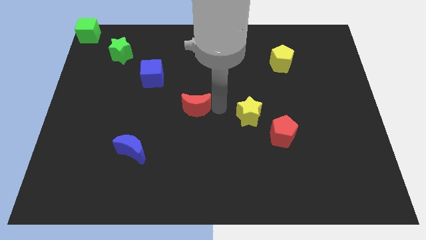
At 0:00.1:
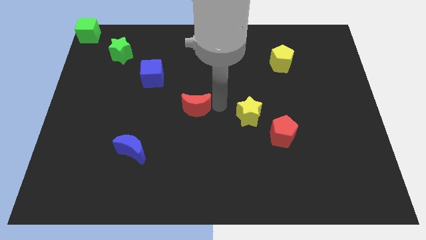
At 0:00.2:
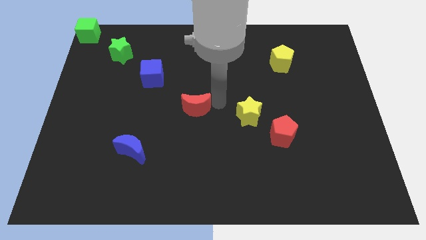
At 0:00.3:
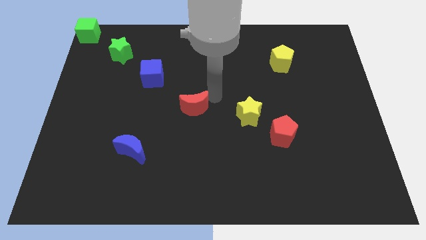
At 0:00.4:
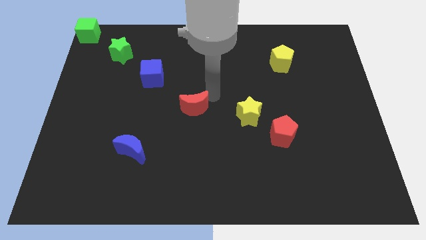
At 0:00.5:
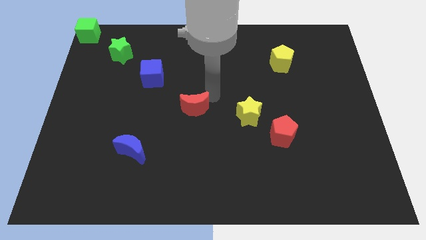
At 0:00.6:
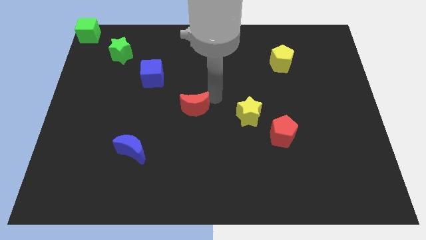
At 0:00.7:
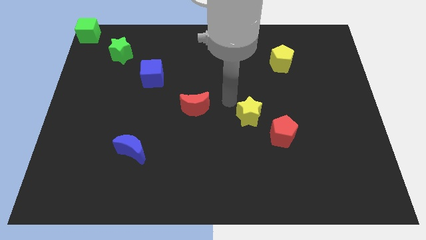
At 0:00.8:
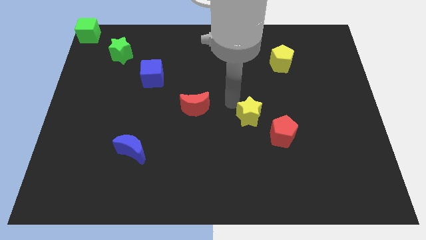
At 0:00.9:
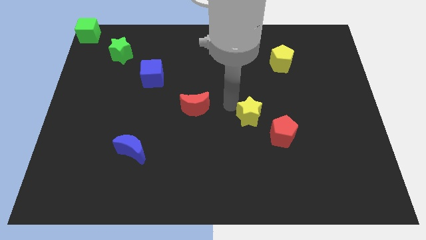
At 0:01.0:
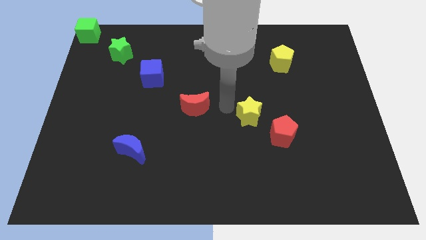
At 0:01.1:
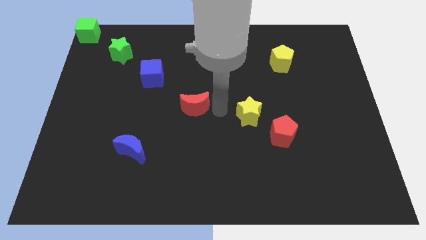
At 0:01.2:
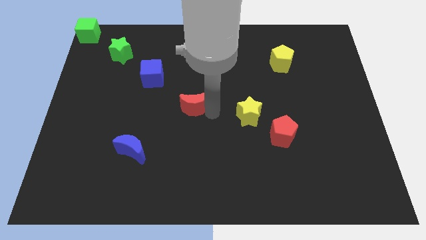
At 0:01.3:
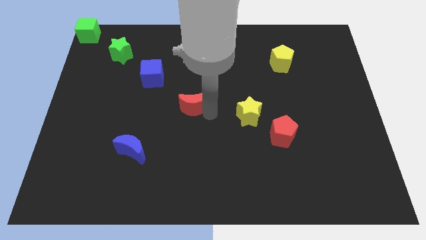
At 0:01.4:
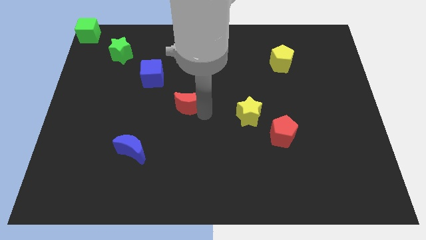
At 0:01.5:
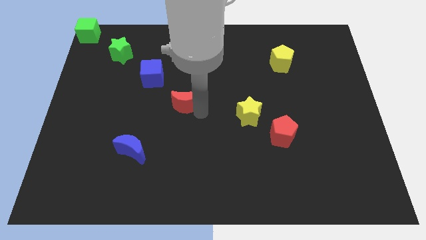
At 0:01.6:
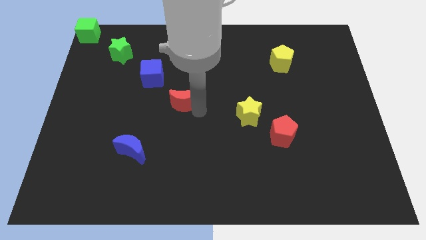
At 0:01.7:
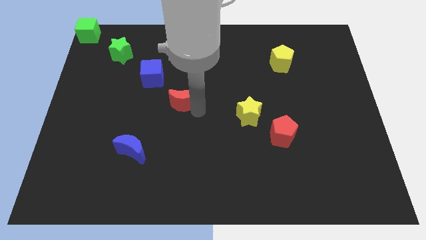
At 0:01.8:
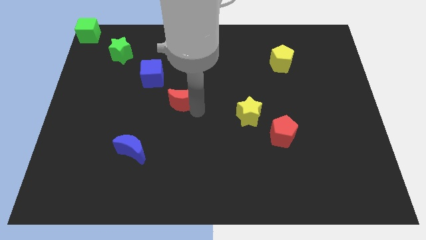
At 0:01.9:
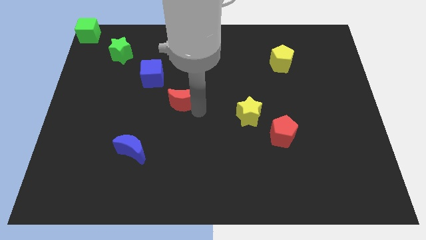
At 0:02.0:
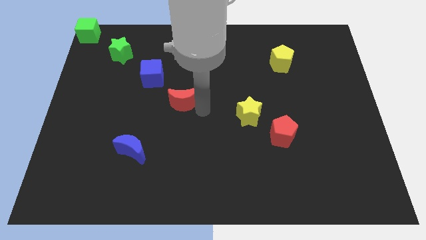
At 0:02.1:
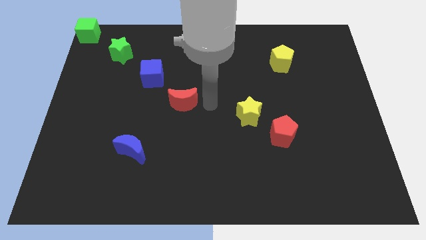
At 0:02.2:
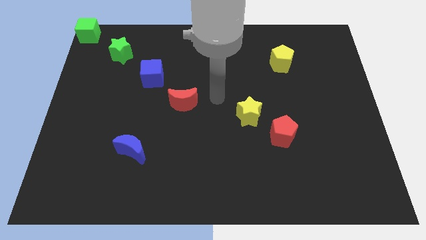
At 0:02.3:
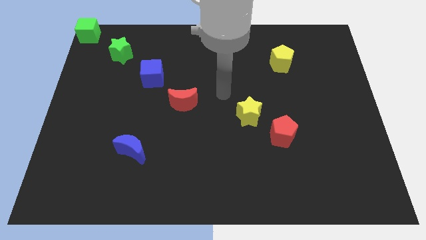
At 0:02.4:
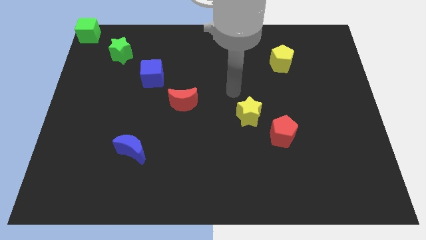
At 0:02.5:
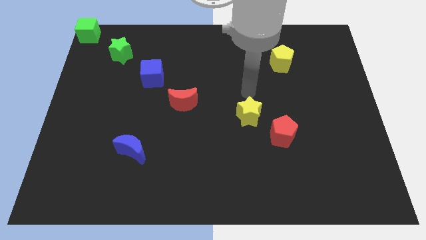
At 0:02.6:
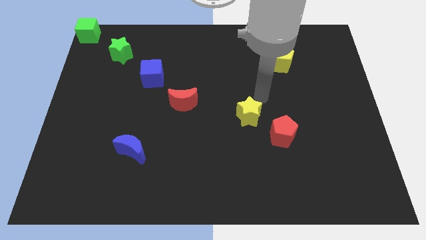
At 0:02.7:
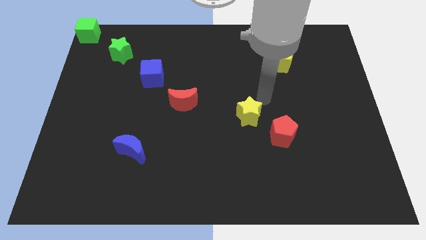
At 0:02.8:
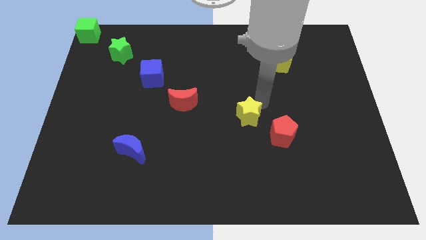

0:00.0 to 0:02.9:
push red crescent towards blue cube

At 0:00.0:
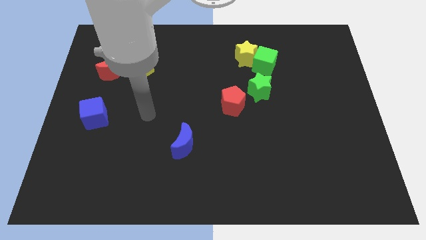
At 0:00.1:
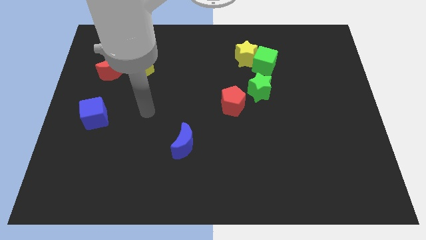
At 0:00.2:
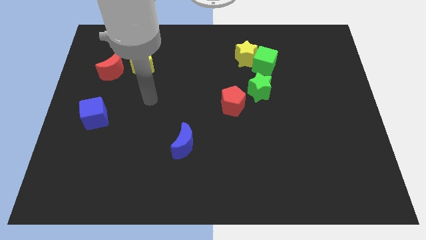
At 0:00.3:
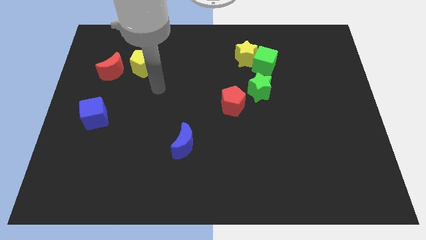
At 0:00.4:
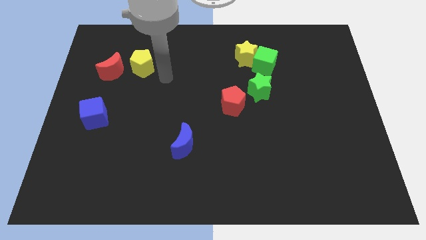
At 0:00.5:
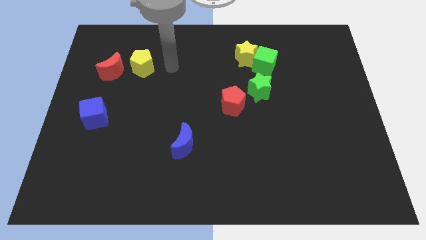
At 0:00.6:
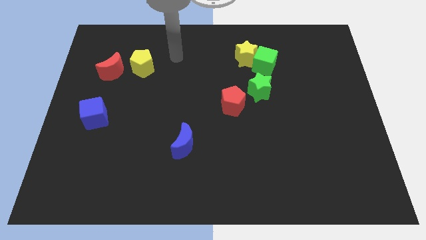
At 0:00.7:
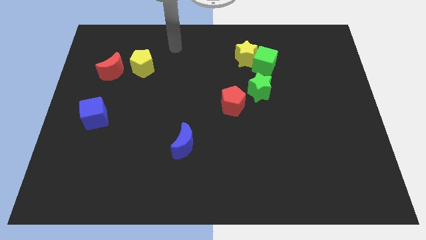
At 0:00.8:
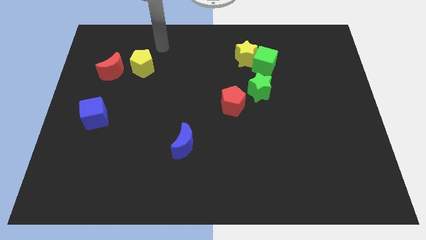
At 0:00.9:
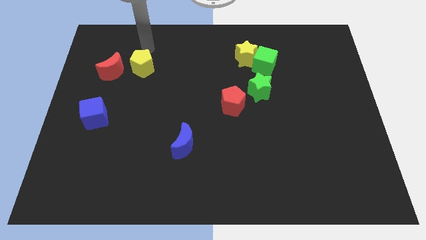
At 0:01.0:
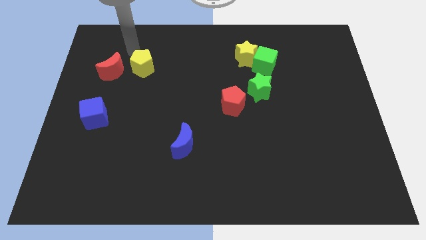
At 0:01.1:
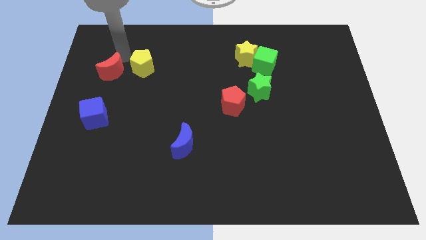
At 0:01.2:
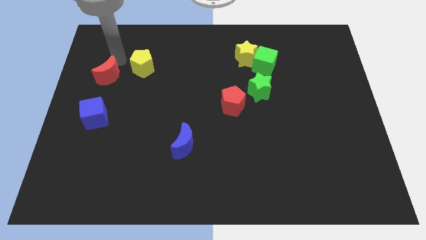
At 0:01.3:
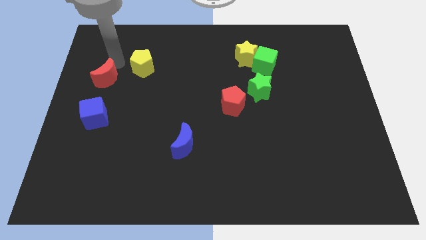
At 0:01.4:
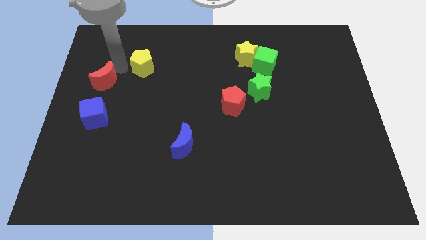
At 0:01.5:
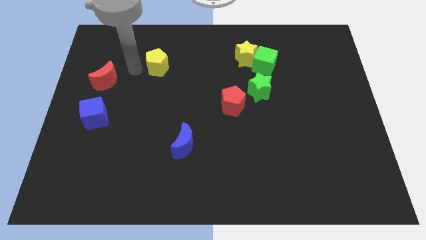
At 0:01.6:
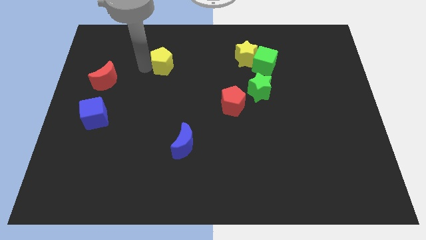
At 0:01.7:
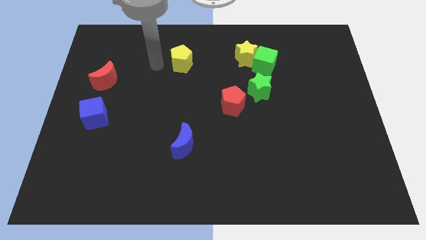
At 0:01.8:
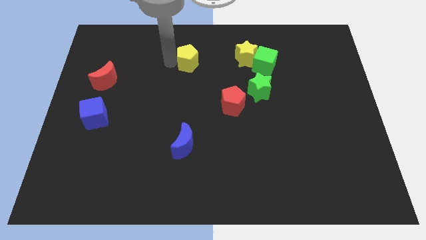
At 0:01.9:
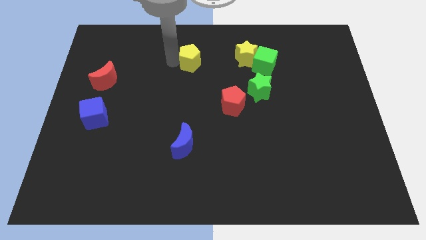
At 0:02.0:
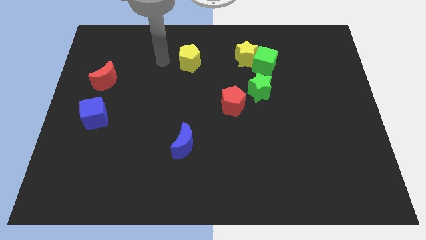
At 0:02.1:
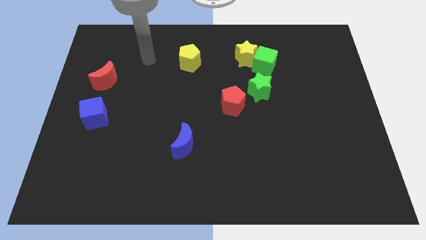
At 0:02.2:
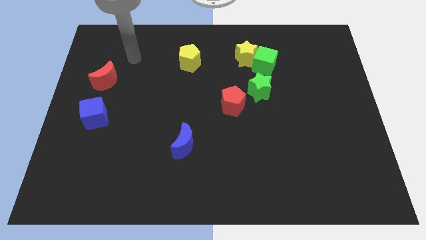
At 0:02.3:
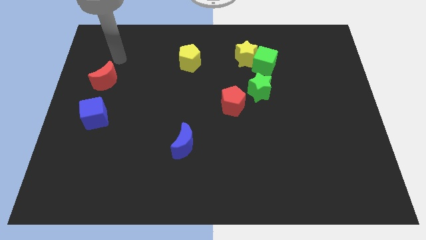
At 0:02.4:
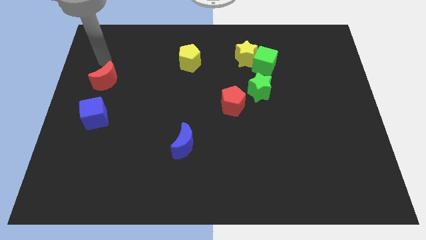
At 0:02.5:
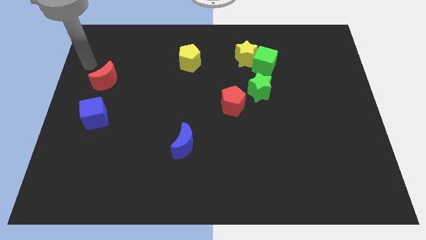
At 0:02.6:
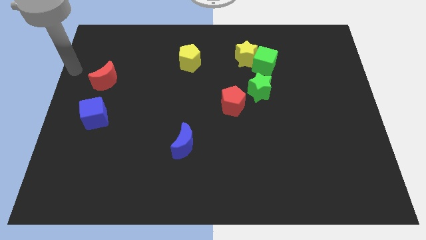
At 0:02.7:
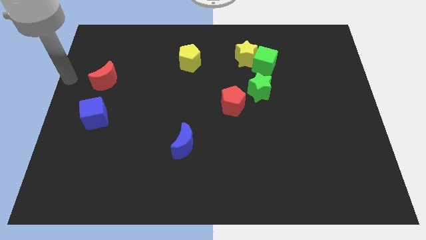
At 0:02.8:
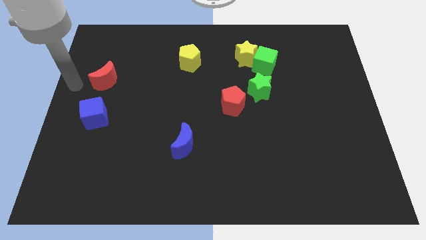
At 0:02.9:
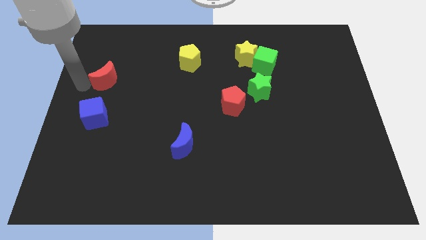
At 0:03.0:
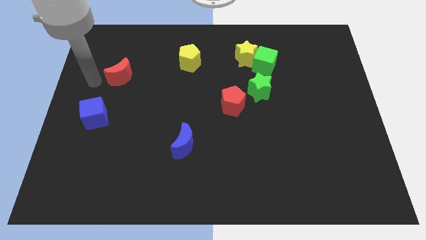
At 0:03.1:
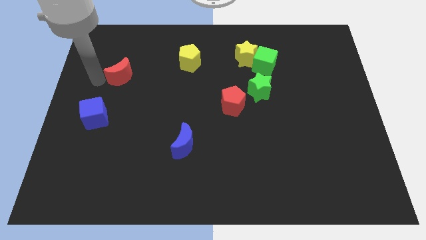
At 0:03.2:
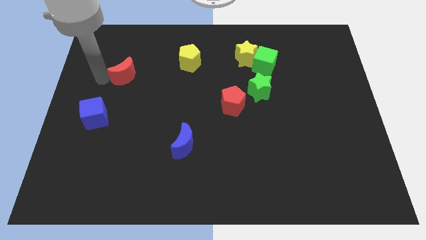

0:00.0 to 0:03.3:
place the yellow pentagon vertically above the blue moon

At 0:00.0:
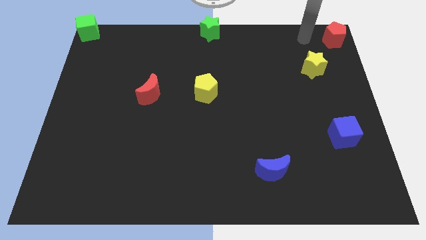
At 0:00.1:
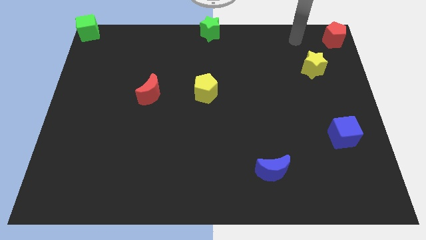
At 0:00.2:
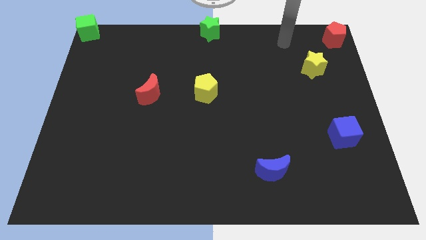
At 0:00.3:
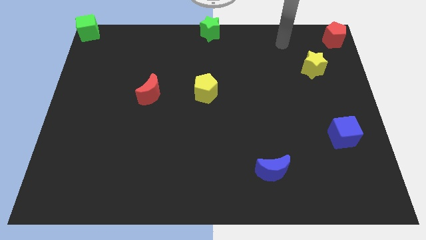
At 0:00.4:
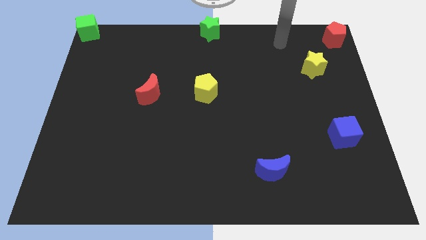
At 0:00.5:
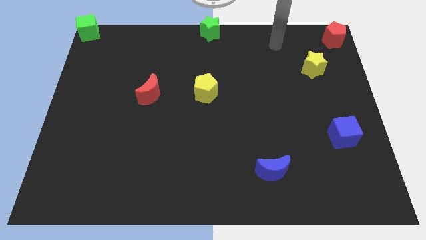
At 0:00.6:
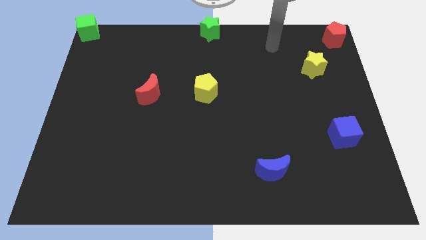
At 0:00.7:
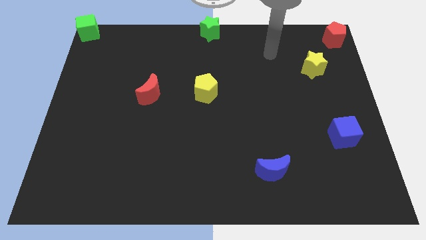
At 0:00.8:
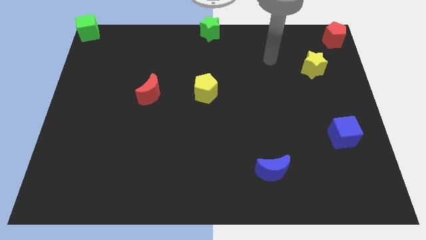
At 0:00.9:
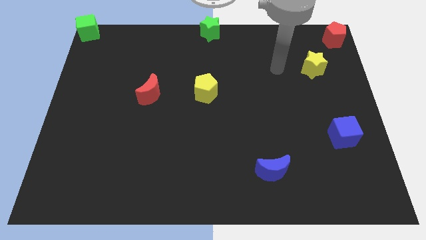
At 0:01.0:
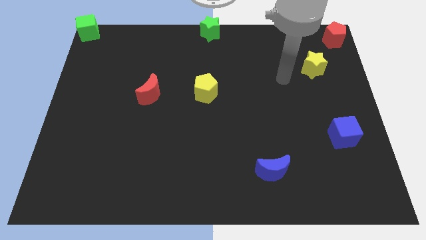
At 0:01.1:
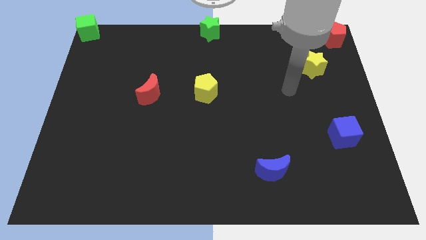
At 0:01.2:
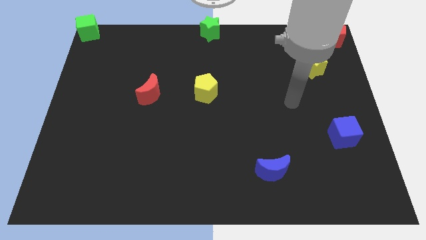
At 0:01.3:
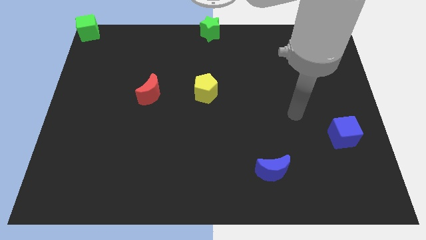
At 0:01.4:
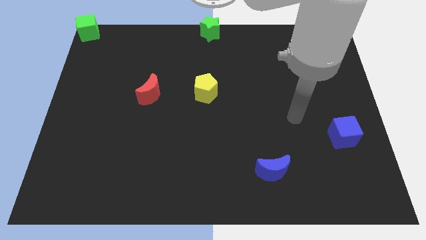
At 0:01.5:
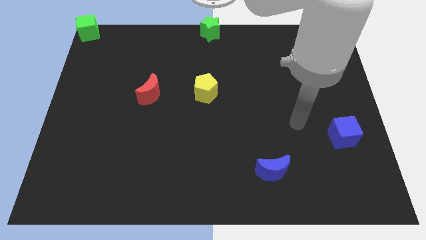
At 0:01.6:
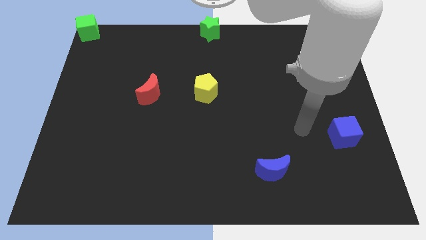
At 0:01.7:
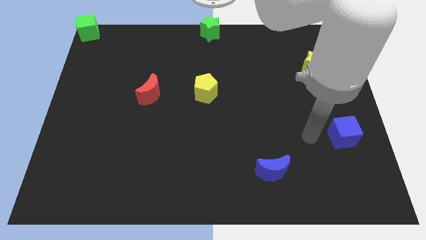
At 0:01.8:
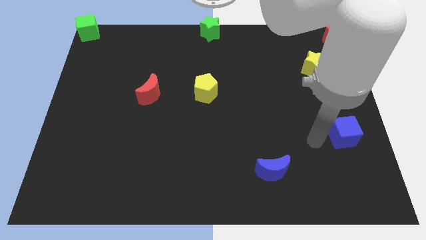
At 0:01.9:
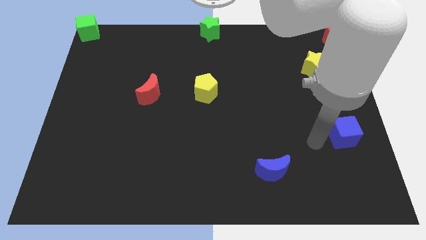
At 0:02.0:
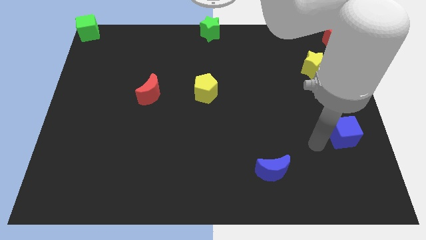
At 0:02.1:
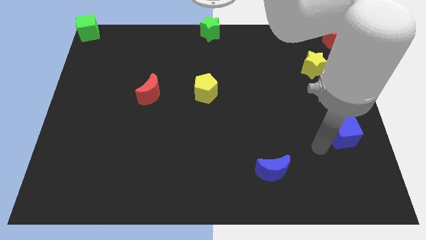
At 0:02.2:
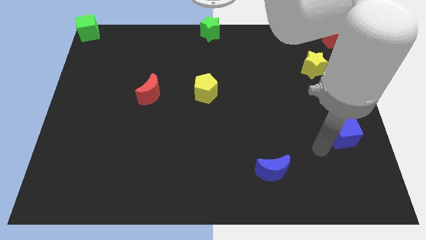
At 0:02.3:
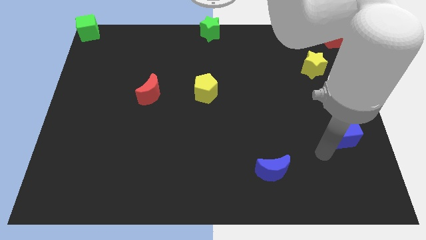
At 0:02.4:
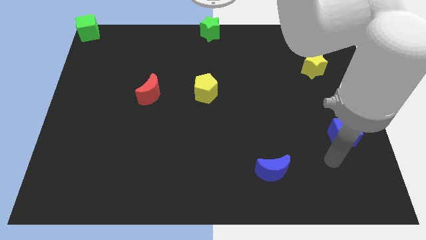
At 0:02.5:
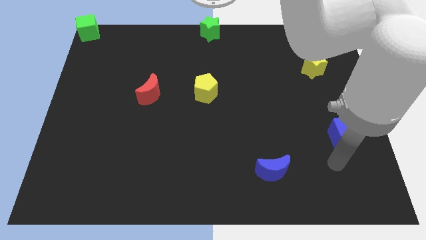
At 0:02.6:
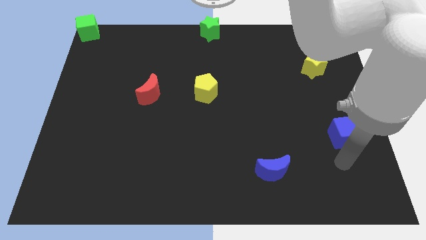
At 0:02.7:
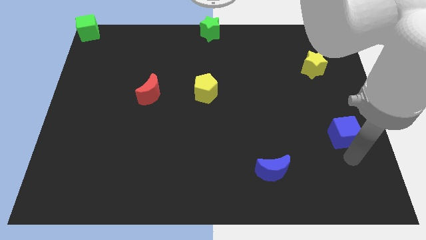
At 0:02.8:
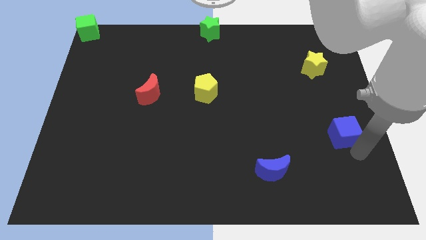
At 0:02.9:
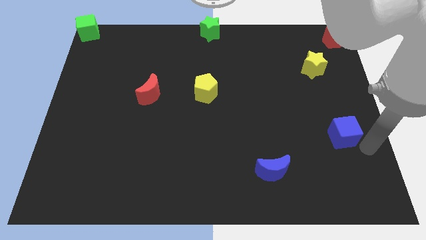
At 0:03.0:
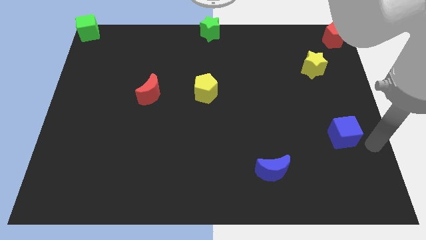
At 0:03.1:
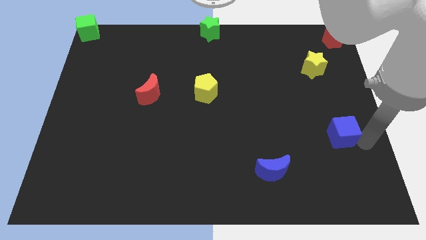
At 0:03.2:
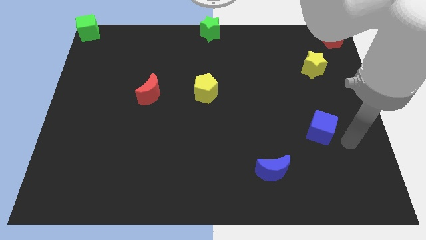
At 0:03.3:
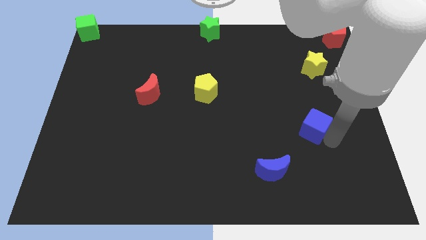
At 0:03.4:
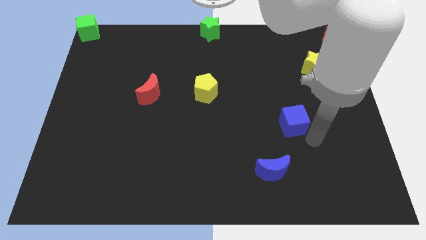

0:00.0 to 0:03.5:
push the blue cube diagonally in between the yellow star and blue crescent
